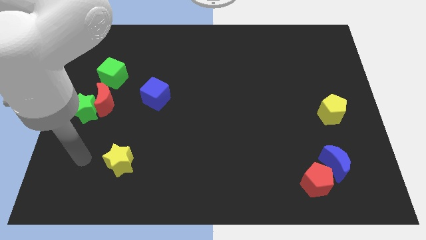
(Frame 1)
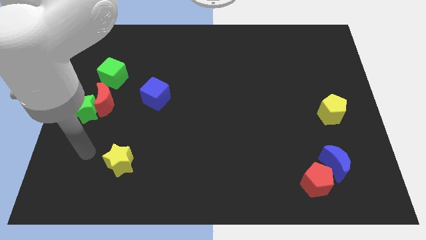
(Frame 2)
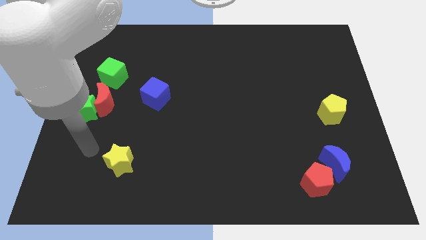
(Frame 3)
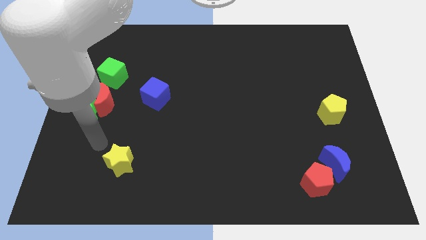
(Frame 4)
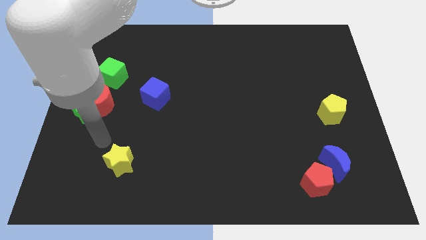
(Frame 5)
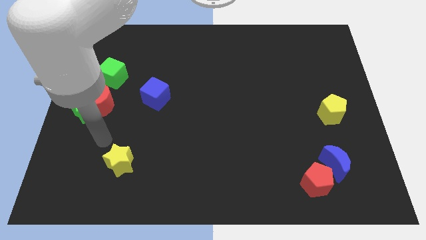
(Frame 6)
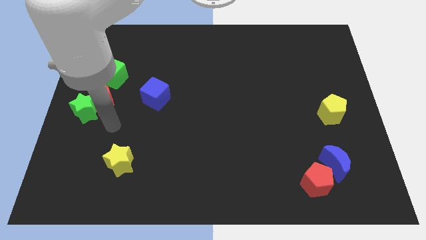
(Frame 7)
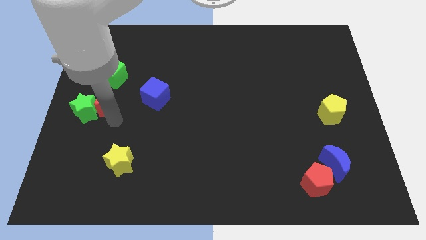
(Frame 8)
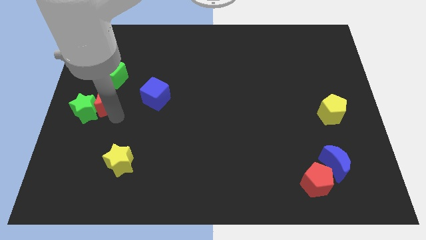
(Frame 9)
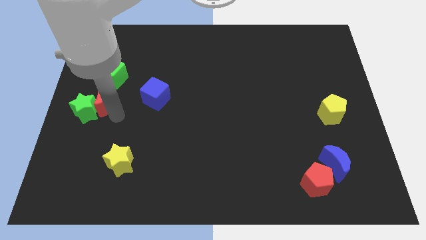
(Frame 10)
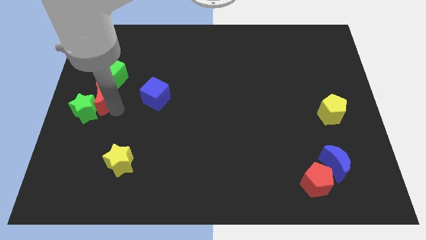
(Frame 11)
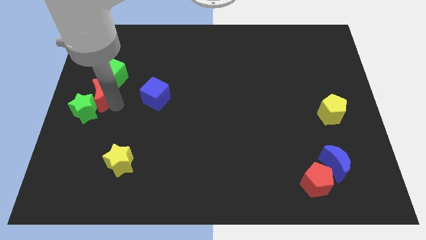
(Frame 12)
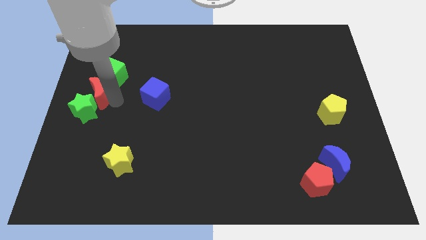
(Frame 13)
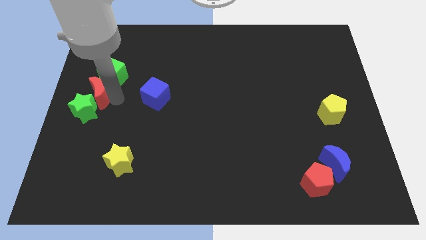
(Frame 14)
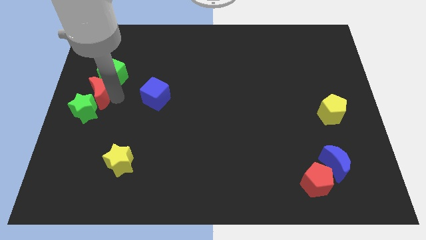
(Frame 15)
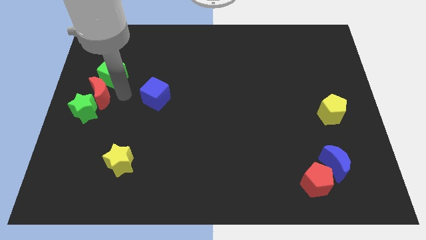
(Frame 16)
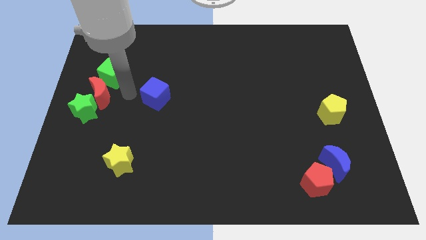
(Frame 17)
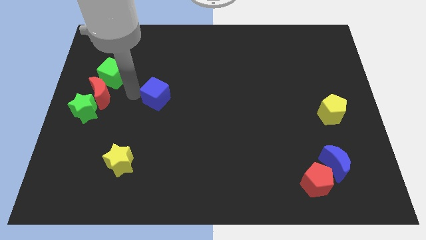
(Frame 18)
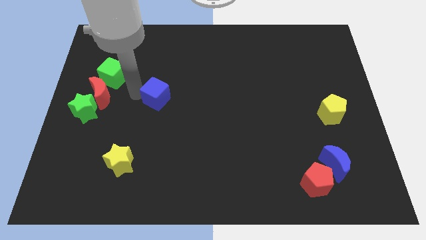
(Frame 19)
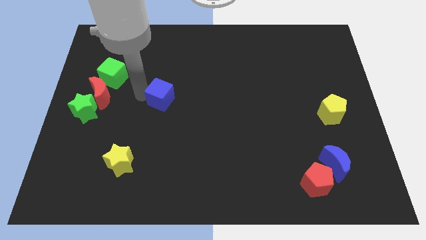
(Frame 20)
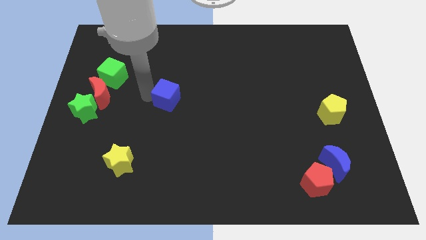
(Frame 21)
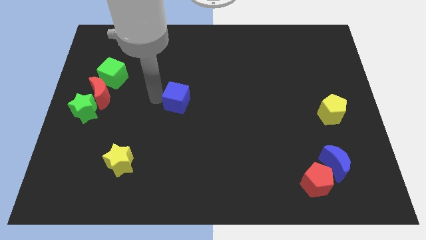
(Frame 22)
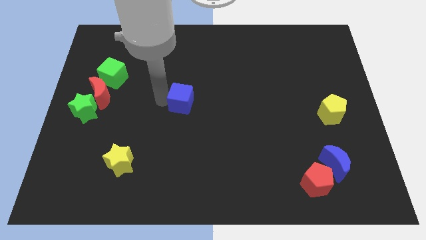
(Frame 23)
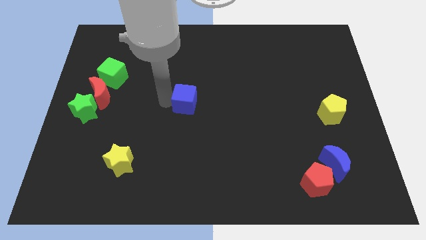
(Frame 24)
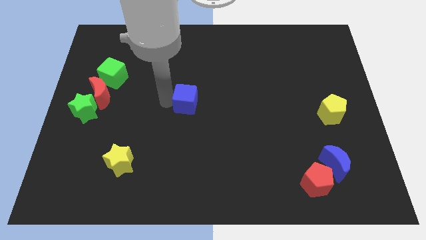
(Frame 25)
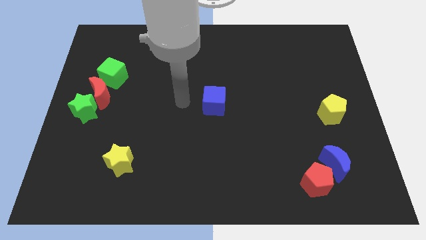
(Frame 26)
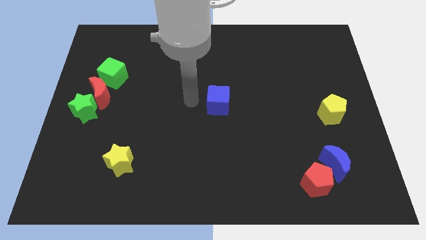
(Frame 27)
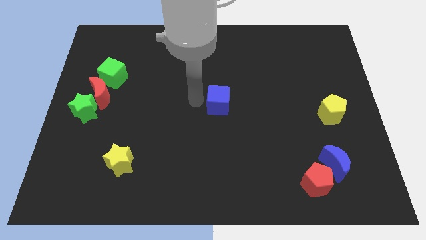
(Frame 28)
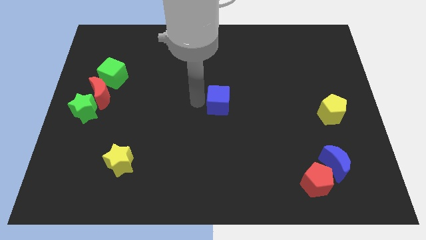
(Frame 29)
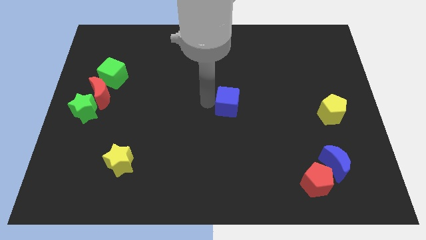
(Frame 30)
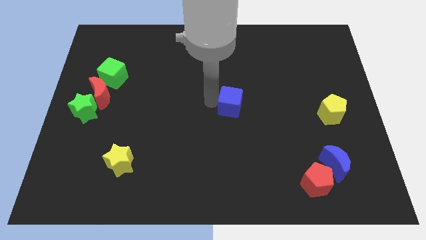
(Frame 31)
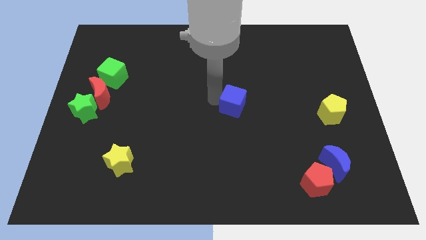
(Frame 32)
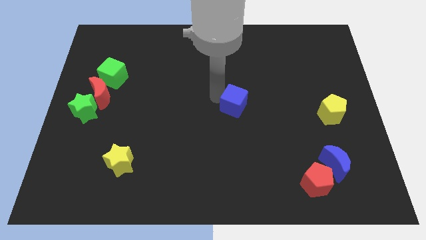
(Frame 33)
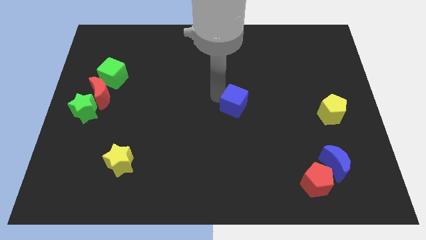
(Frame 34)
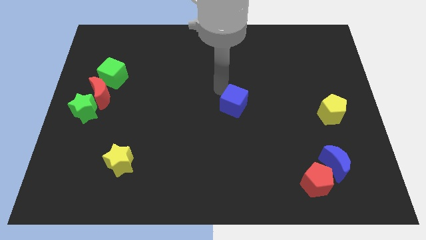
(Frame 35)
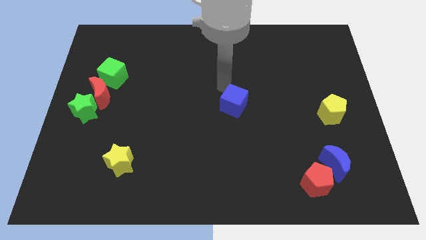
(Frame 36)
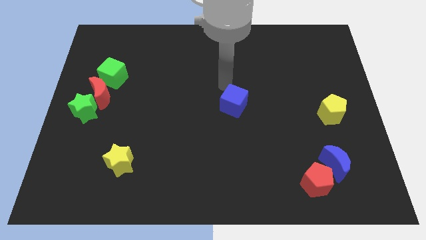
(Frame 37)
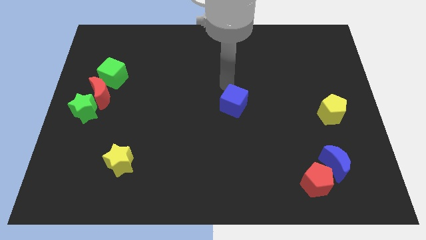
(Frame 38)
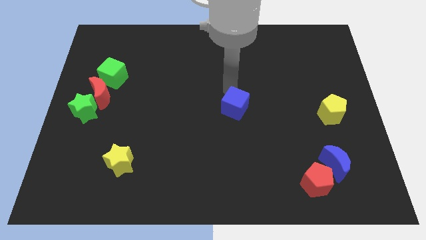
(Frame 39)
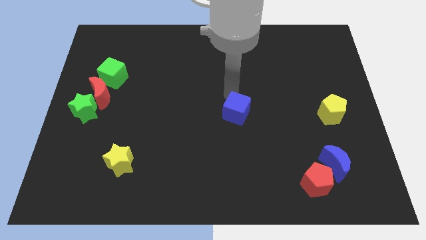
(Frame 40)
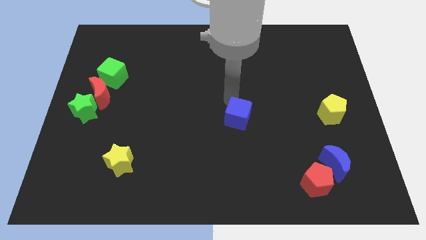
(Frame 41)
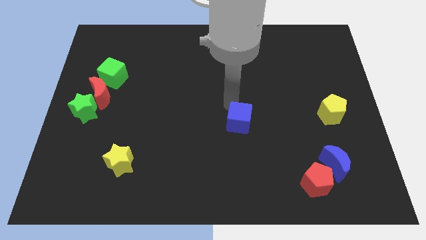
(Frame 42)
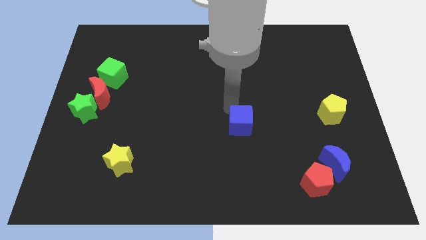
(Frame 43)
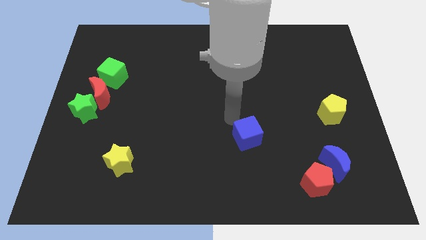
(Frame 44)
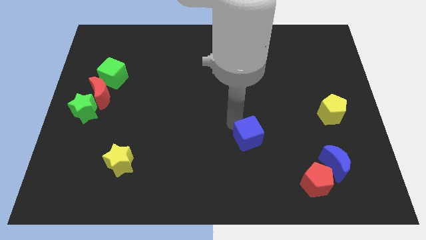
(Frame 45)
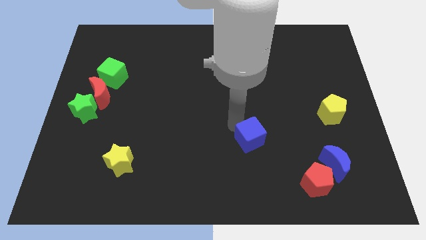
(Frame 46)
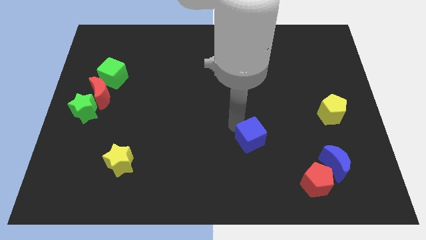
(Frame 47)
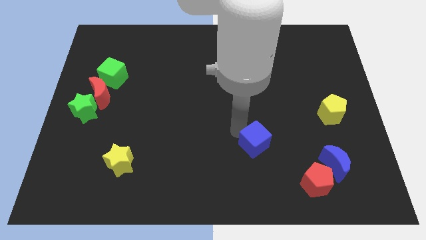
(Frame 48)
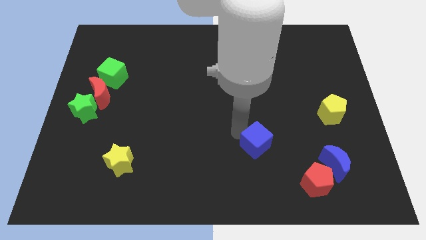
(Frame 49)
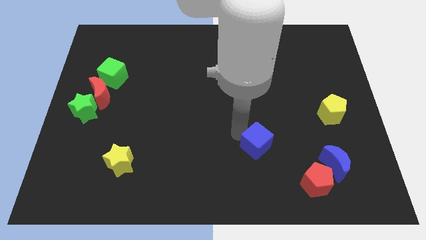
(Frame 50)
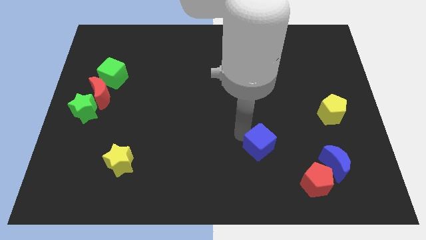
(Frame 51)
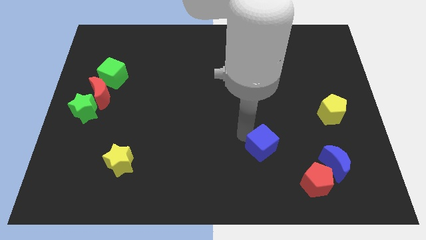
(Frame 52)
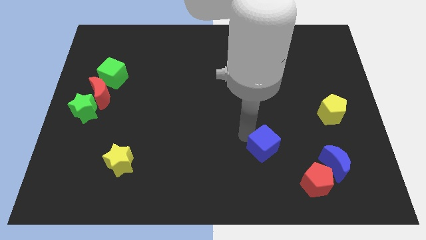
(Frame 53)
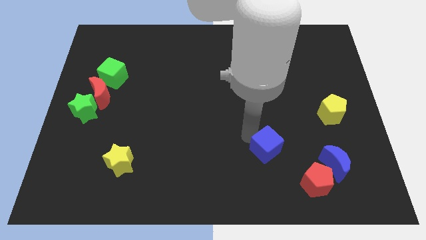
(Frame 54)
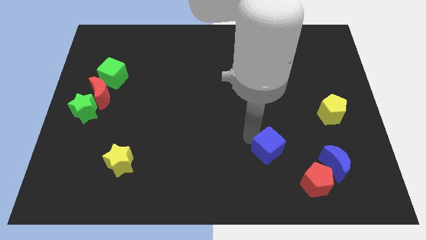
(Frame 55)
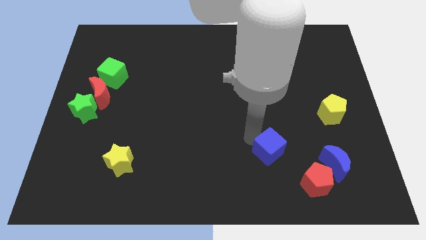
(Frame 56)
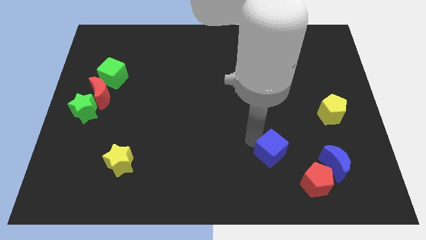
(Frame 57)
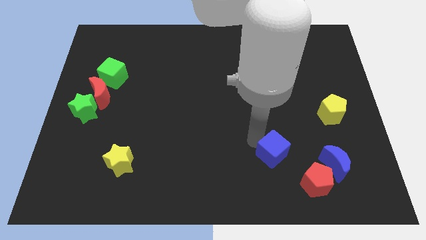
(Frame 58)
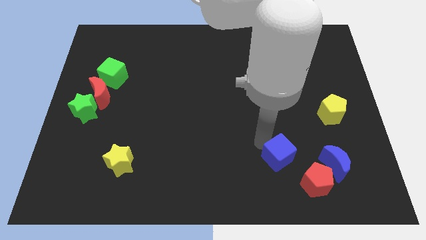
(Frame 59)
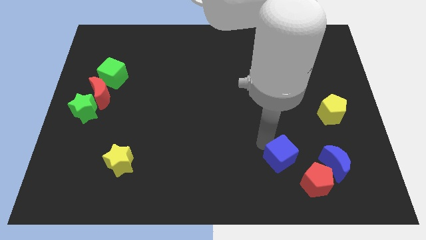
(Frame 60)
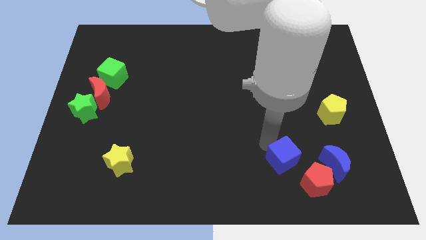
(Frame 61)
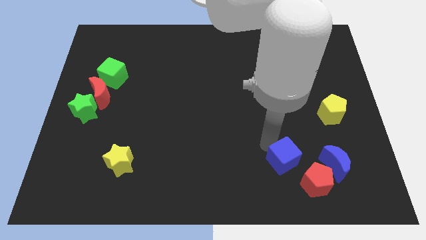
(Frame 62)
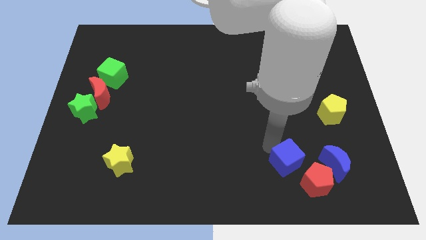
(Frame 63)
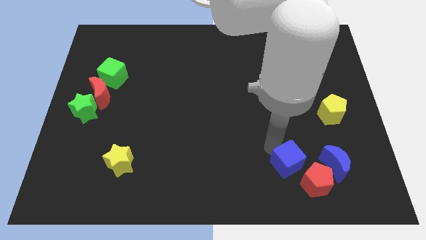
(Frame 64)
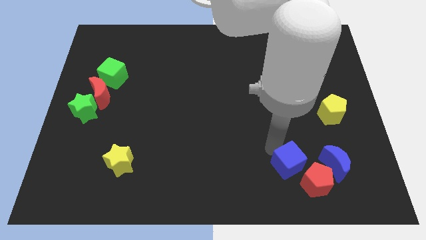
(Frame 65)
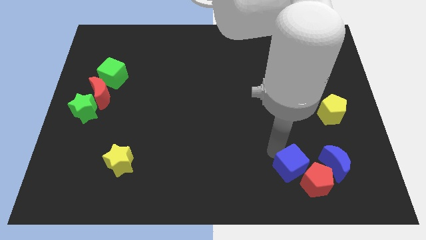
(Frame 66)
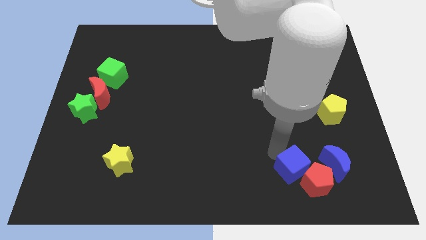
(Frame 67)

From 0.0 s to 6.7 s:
push the blue cube next to the red pentagon

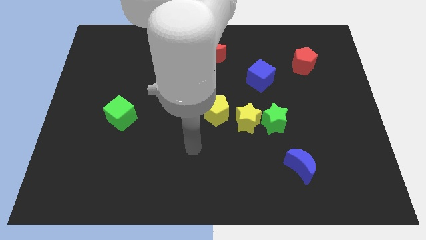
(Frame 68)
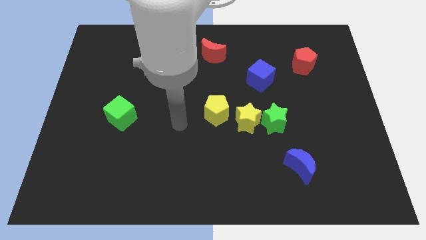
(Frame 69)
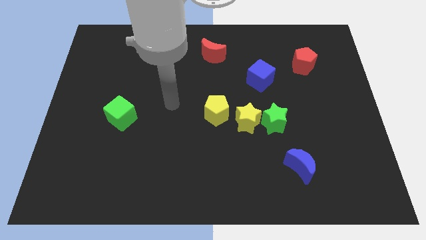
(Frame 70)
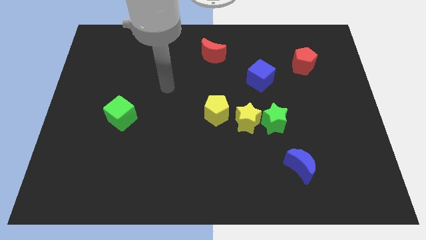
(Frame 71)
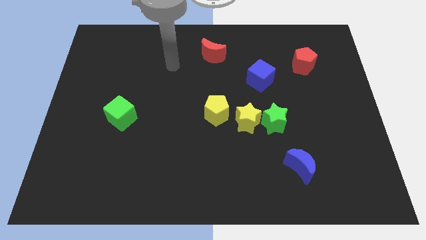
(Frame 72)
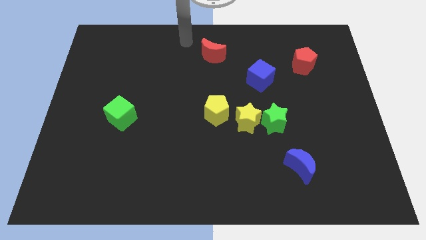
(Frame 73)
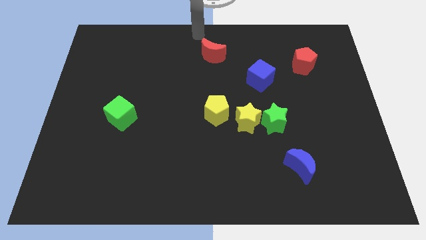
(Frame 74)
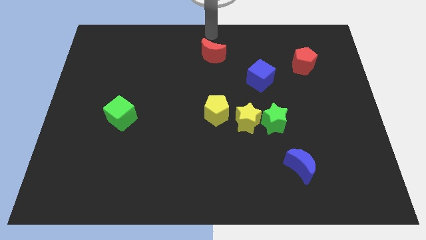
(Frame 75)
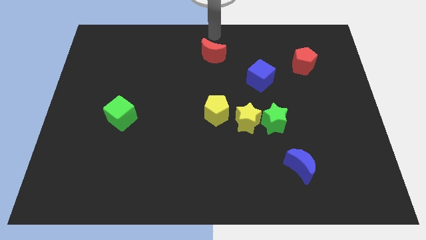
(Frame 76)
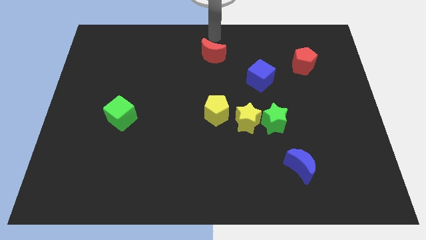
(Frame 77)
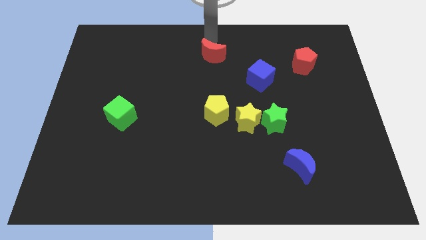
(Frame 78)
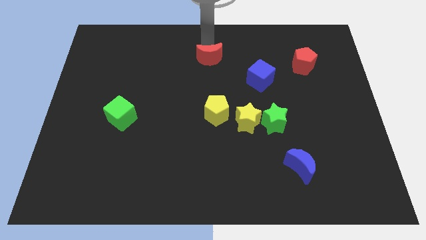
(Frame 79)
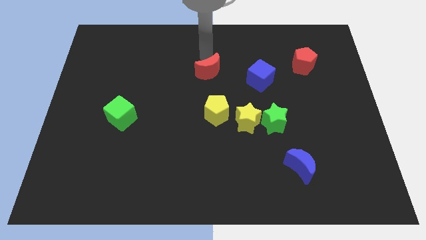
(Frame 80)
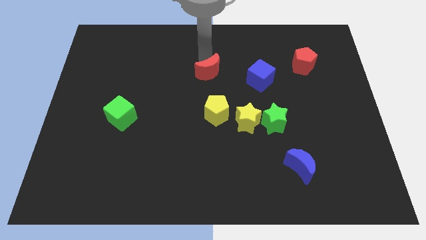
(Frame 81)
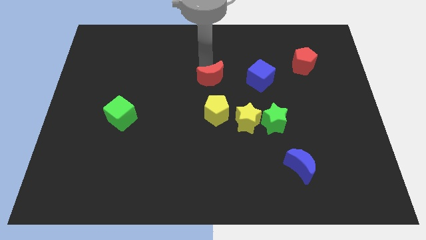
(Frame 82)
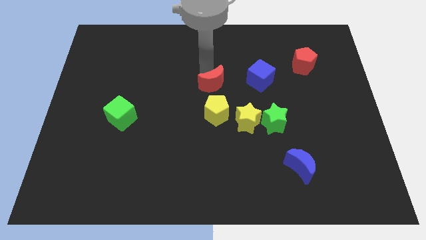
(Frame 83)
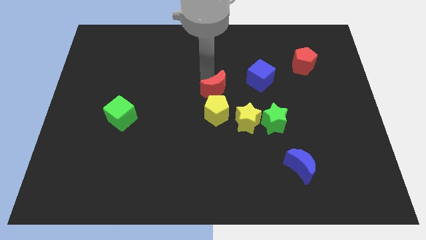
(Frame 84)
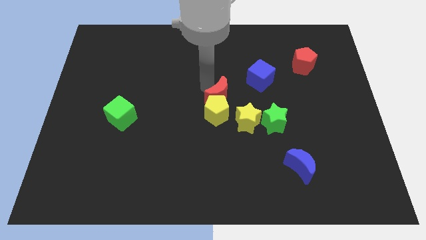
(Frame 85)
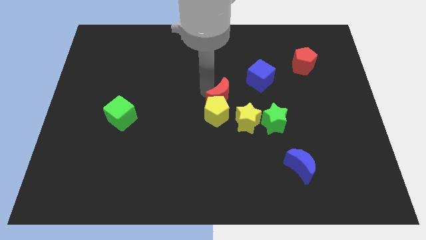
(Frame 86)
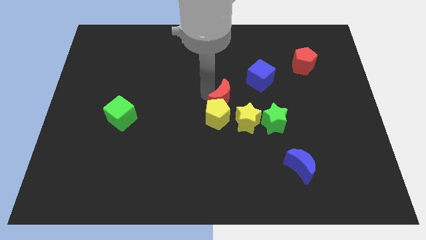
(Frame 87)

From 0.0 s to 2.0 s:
put the red moon to the yellow pentagon
